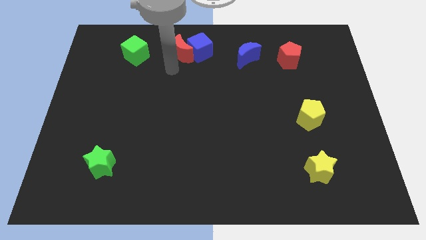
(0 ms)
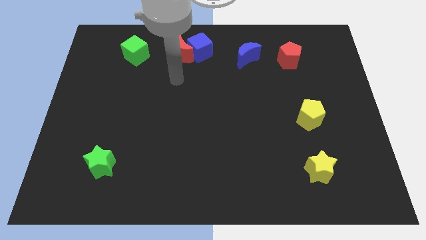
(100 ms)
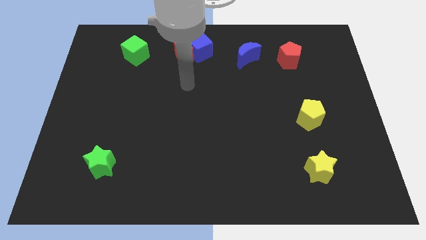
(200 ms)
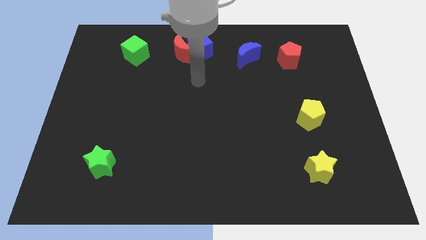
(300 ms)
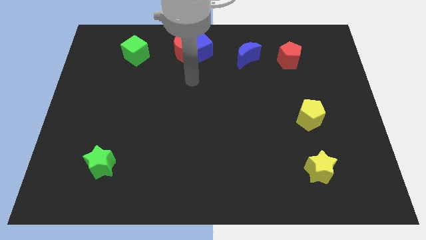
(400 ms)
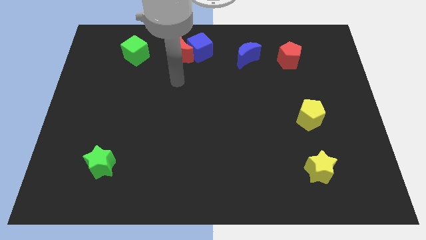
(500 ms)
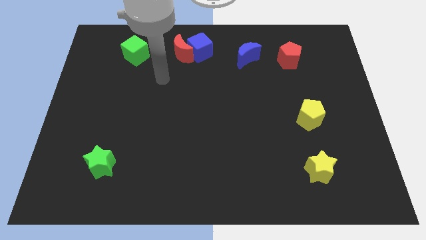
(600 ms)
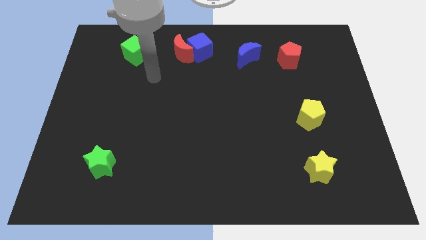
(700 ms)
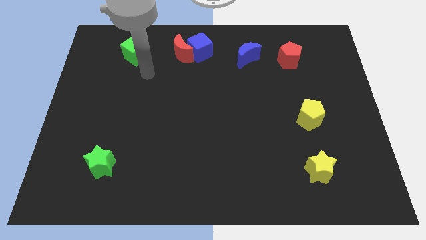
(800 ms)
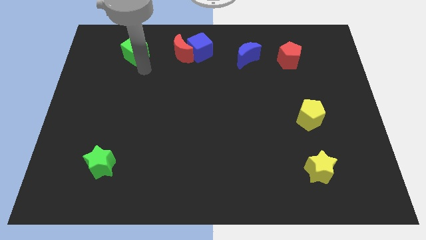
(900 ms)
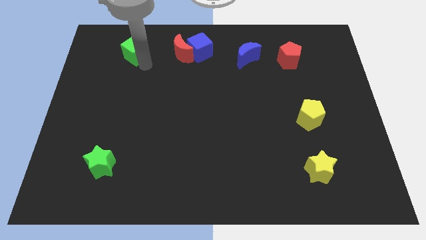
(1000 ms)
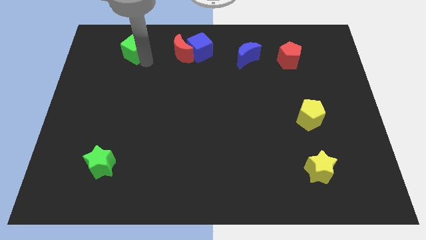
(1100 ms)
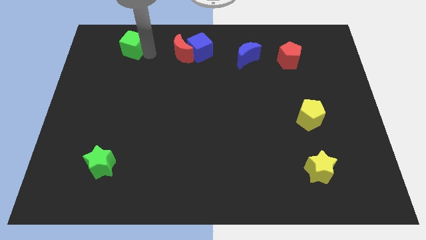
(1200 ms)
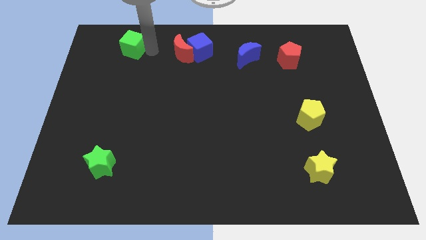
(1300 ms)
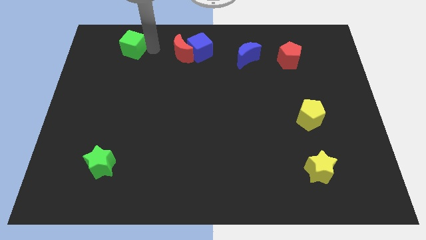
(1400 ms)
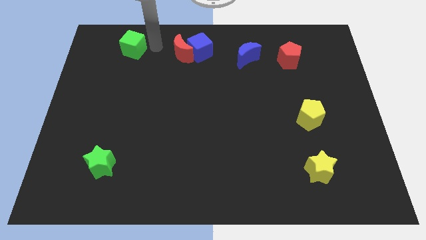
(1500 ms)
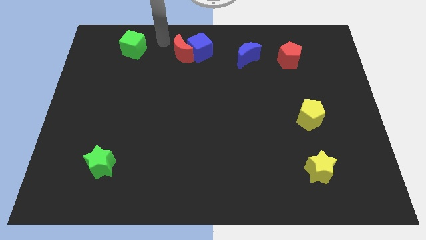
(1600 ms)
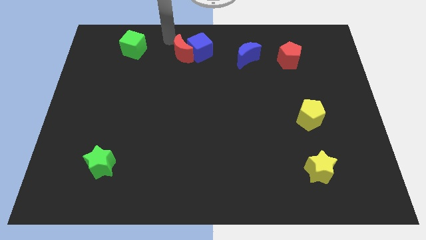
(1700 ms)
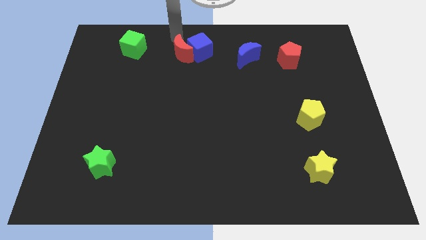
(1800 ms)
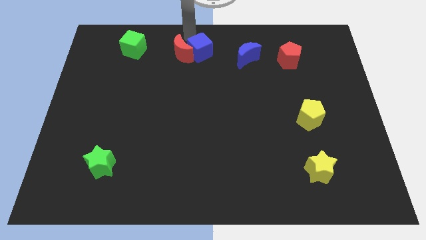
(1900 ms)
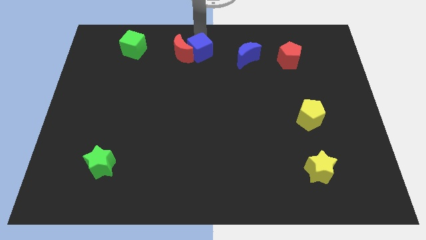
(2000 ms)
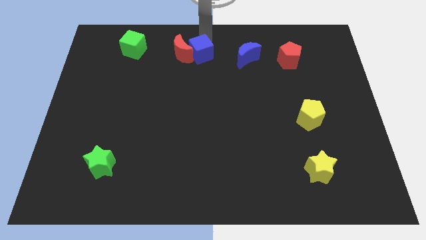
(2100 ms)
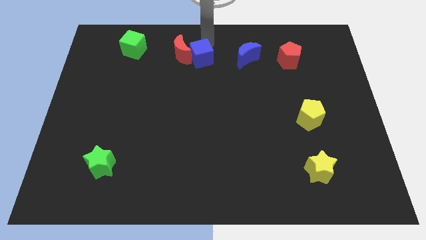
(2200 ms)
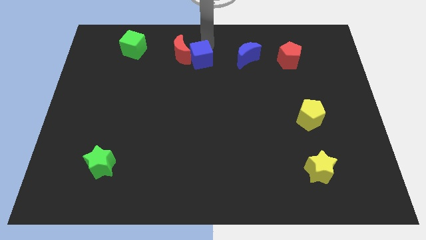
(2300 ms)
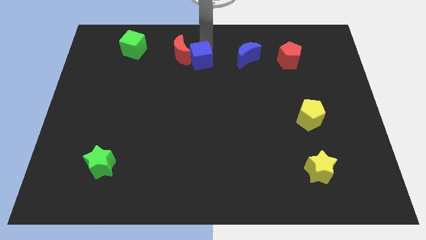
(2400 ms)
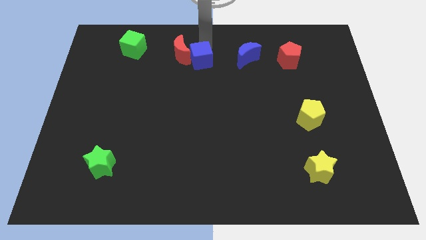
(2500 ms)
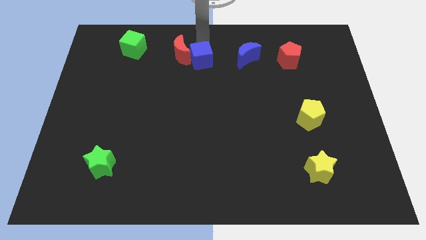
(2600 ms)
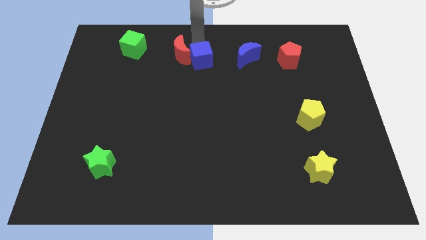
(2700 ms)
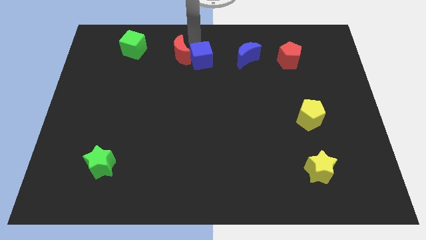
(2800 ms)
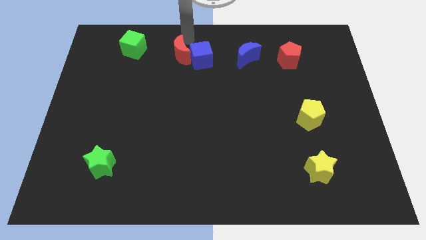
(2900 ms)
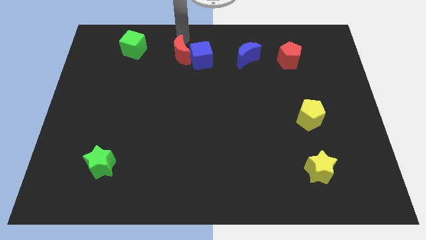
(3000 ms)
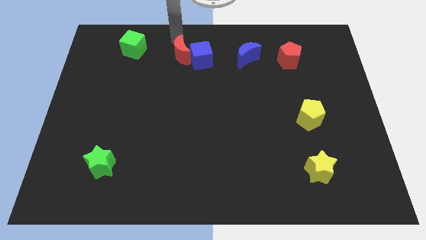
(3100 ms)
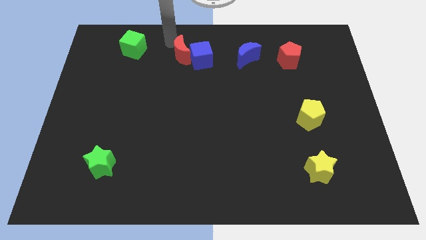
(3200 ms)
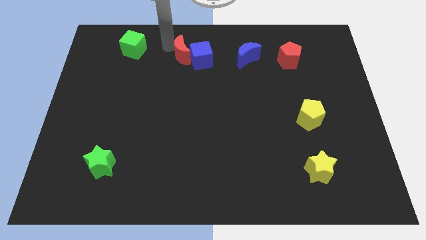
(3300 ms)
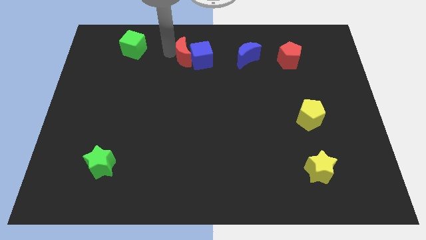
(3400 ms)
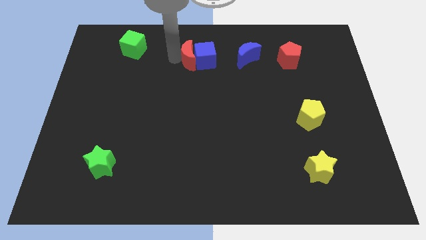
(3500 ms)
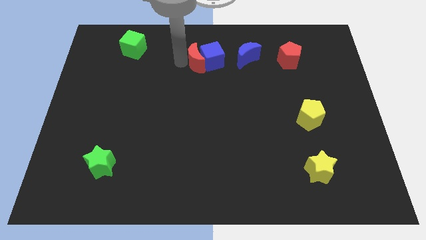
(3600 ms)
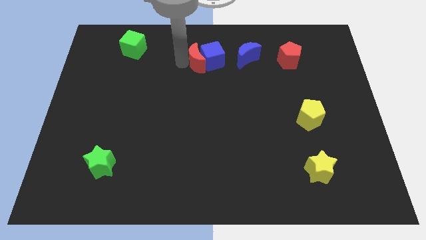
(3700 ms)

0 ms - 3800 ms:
move the red moon and blue cube towards the left side of the blue crescent

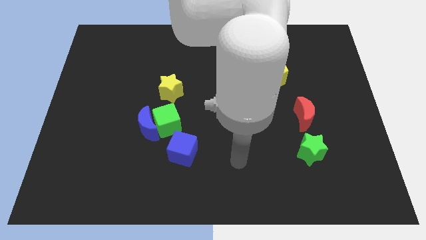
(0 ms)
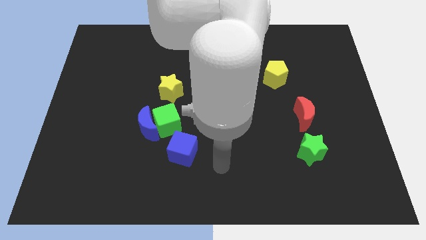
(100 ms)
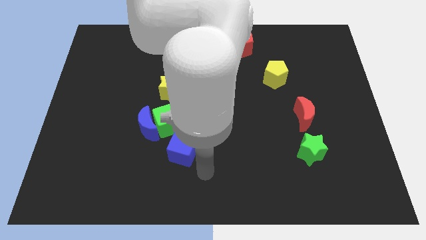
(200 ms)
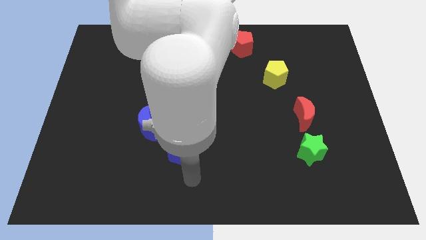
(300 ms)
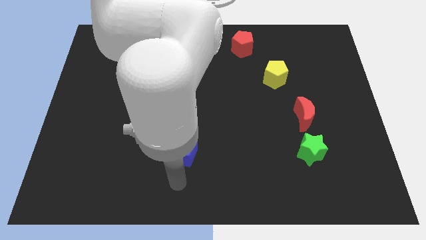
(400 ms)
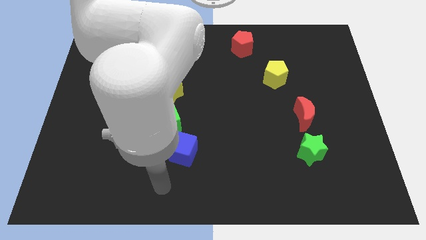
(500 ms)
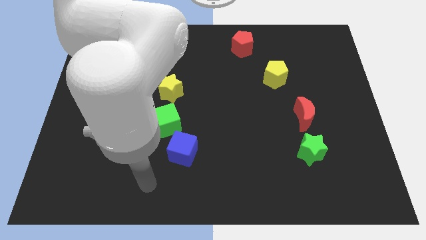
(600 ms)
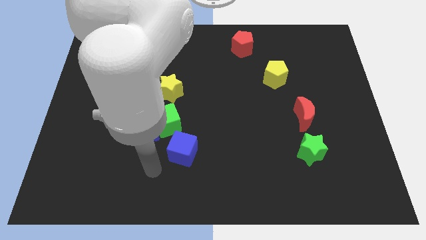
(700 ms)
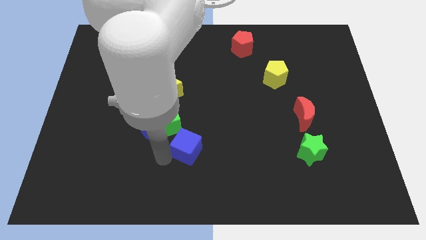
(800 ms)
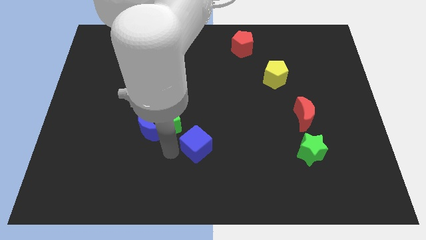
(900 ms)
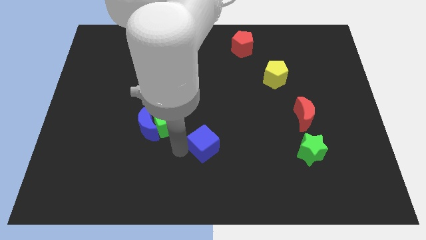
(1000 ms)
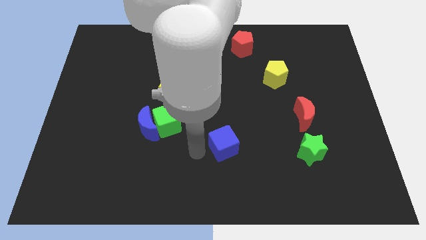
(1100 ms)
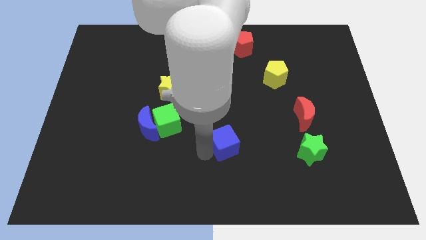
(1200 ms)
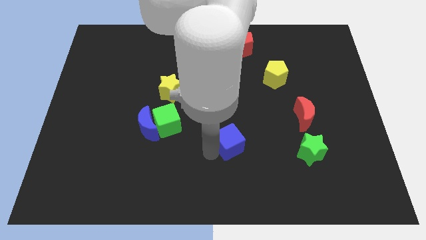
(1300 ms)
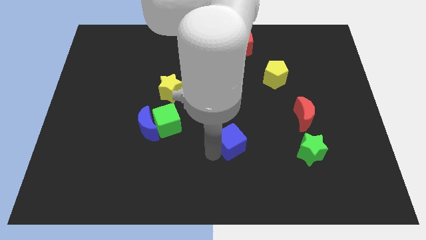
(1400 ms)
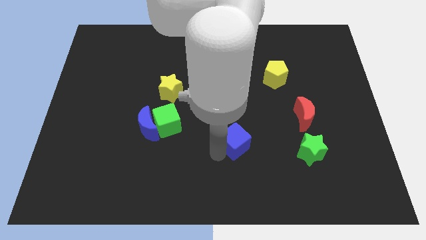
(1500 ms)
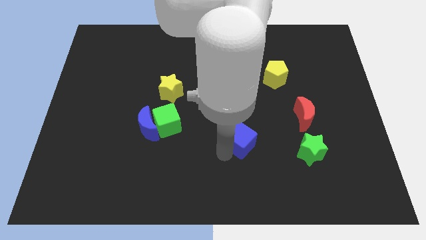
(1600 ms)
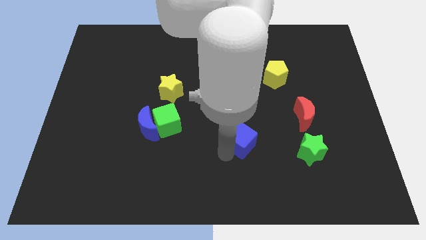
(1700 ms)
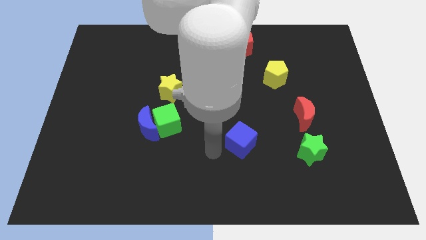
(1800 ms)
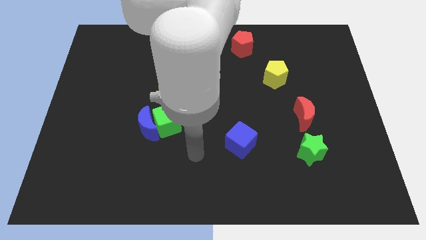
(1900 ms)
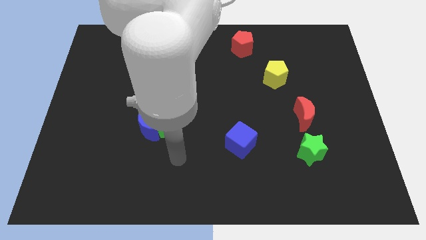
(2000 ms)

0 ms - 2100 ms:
move blue cube to the left of green star

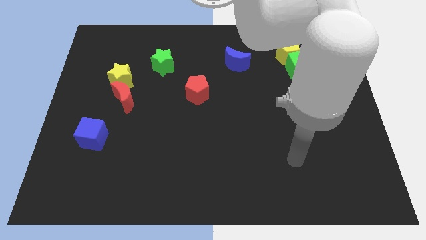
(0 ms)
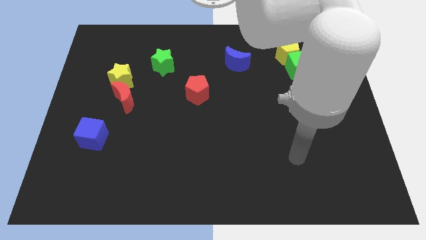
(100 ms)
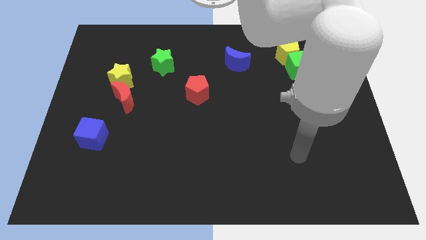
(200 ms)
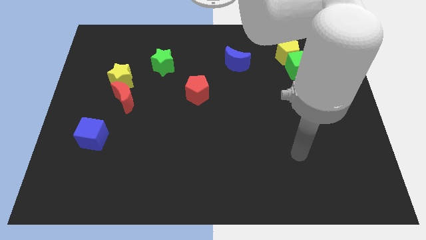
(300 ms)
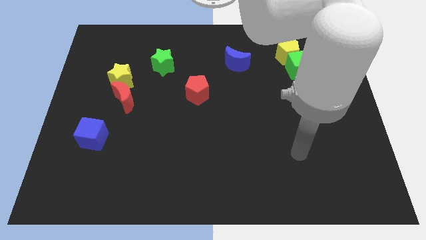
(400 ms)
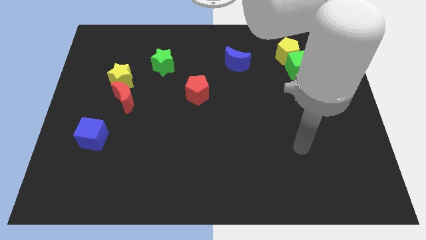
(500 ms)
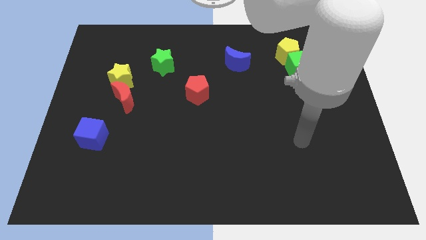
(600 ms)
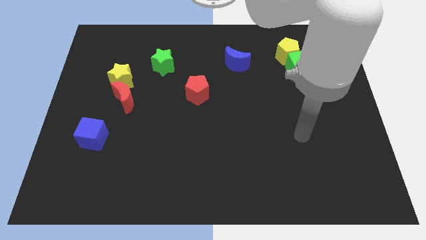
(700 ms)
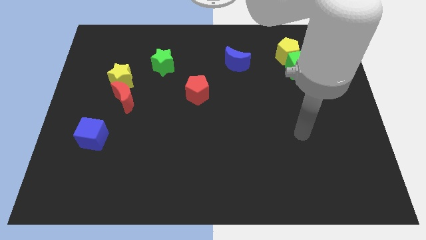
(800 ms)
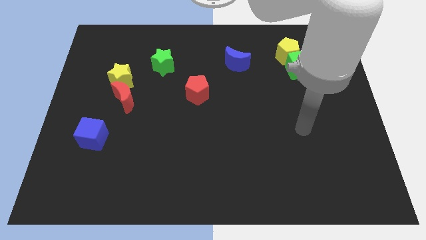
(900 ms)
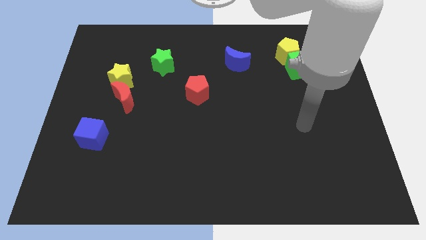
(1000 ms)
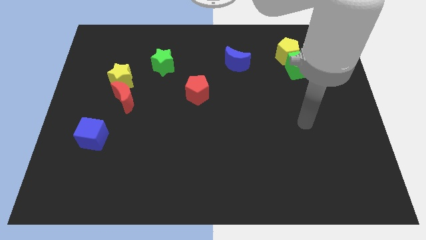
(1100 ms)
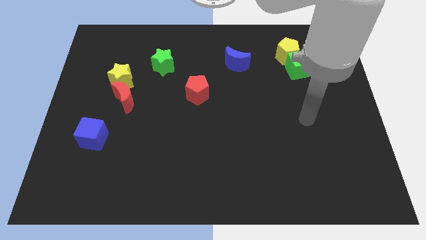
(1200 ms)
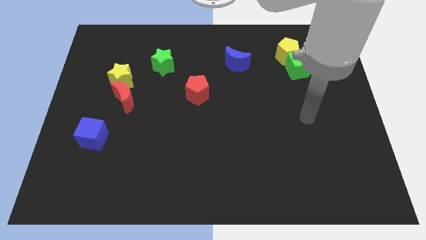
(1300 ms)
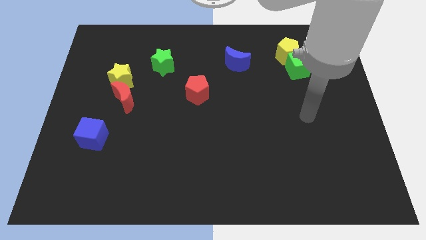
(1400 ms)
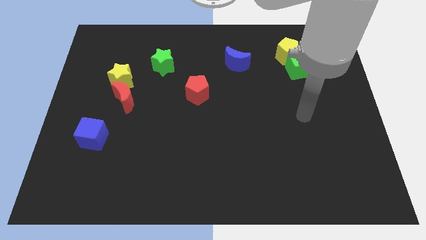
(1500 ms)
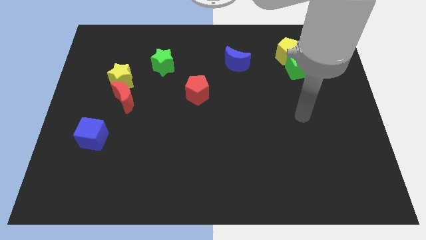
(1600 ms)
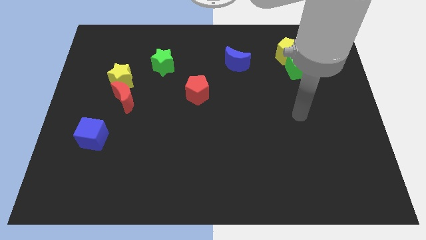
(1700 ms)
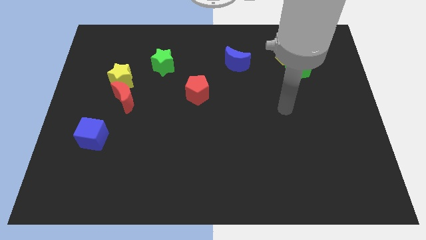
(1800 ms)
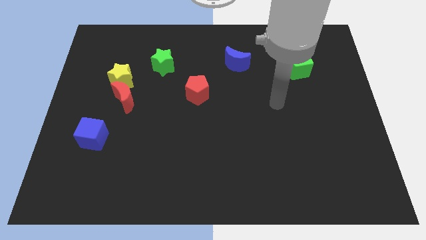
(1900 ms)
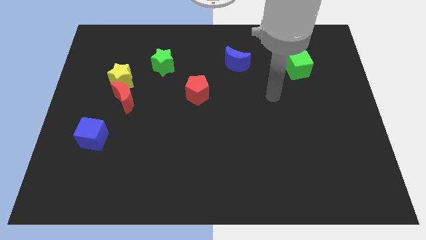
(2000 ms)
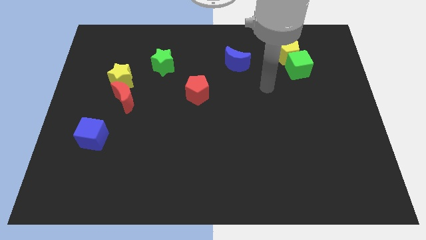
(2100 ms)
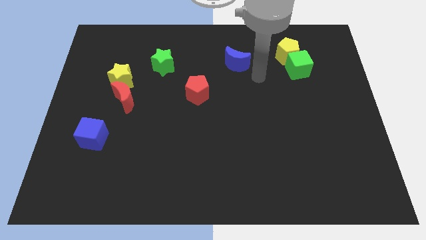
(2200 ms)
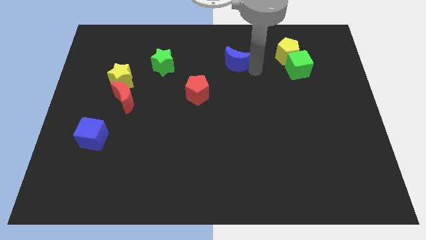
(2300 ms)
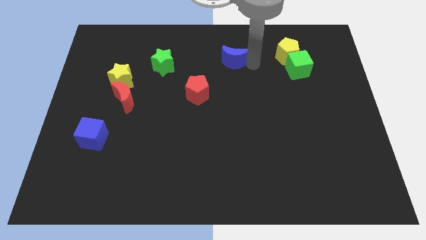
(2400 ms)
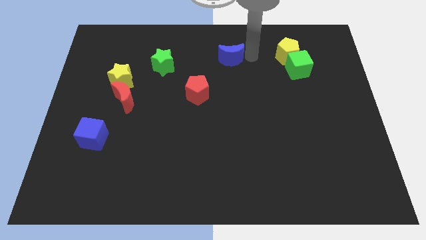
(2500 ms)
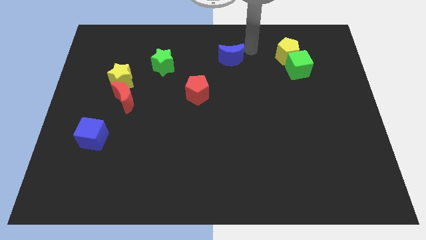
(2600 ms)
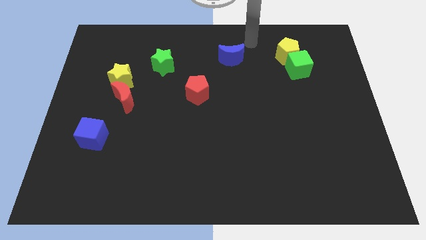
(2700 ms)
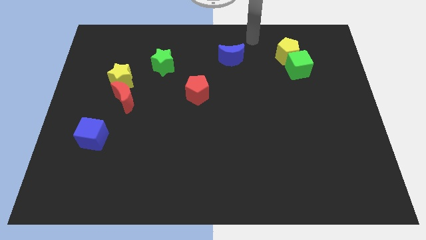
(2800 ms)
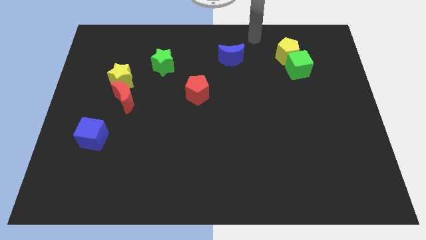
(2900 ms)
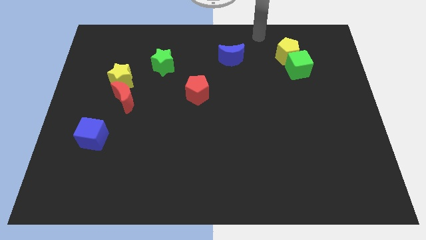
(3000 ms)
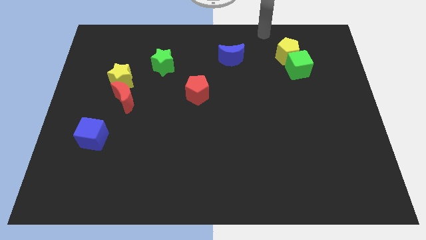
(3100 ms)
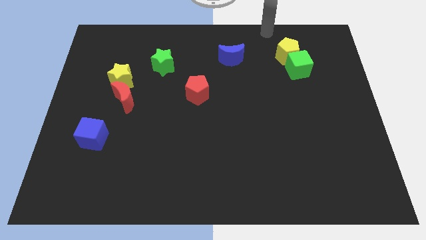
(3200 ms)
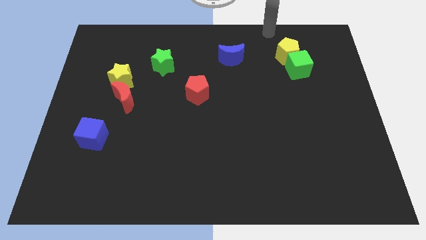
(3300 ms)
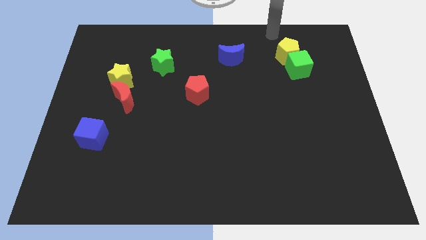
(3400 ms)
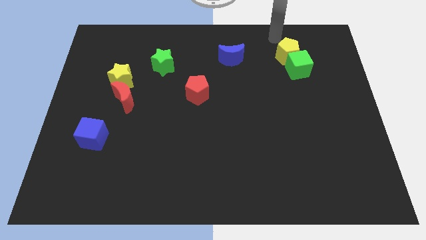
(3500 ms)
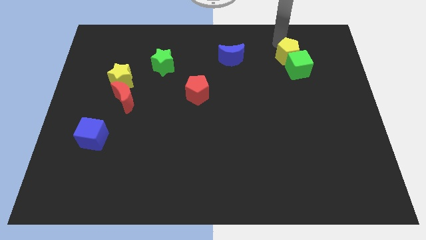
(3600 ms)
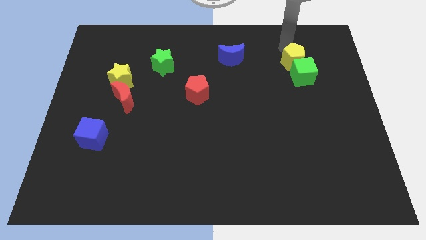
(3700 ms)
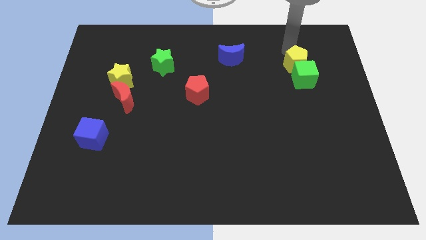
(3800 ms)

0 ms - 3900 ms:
move the arm towards the yellow pentagon
